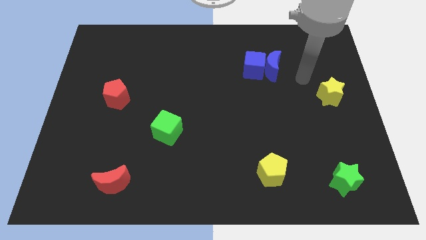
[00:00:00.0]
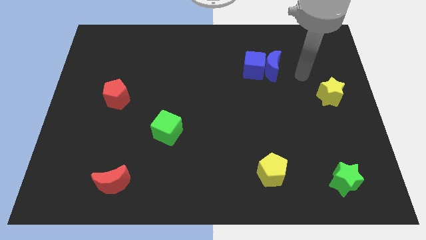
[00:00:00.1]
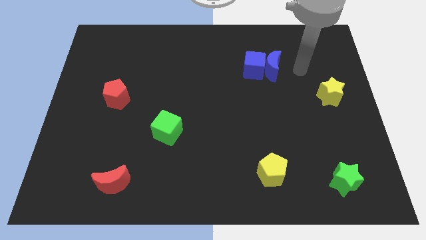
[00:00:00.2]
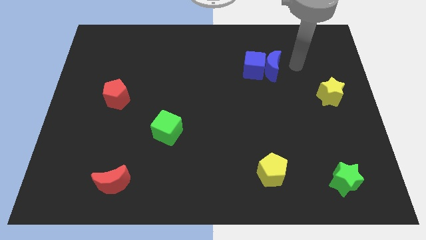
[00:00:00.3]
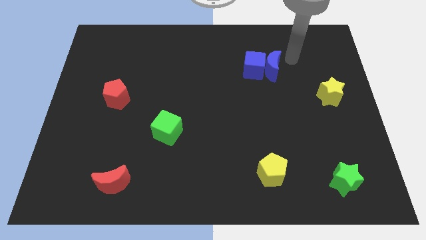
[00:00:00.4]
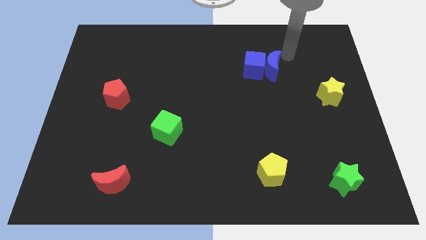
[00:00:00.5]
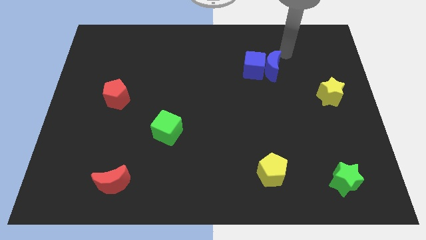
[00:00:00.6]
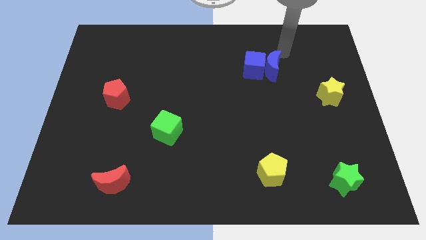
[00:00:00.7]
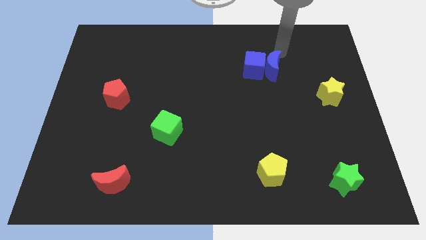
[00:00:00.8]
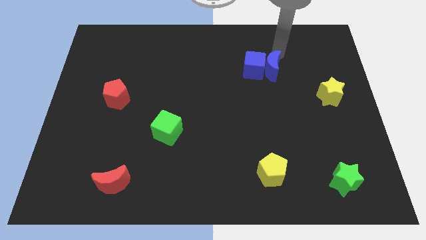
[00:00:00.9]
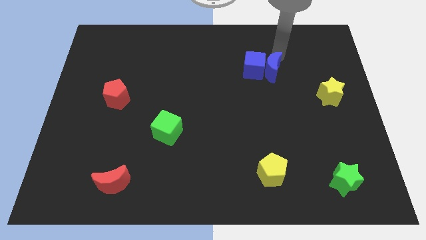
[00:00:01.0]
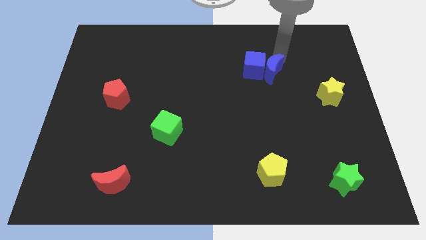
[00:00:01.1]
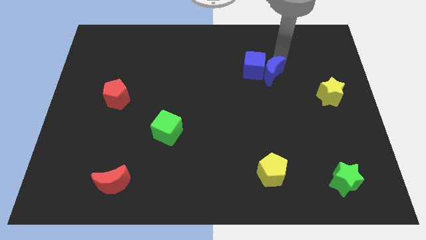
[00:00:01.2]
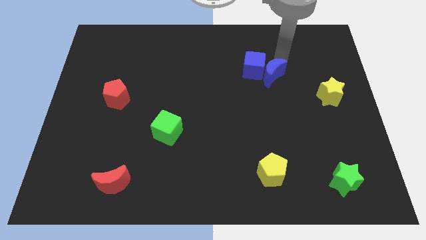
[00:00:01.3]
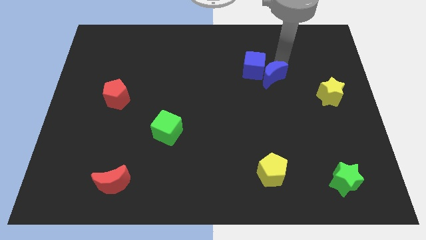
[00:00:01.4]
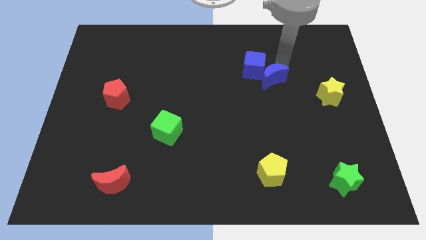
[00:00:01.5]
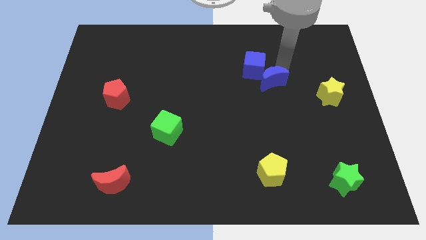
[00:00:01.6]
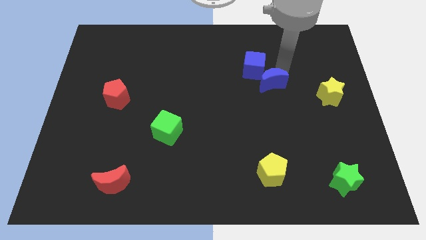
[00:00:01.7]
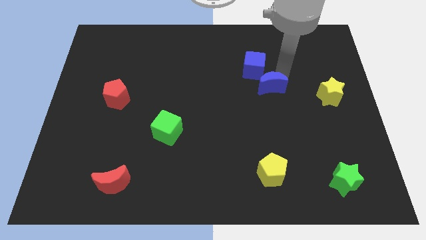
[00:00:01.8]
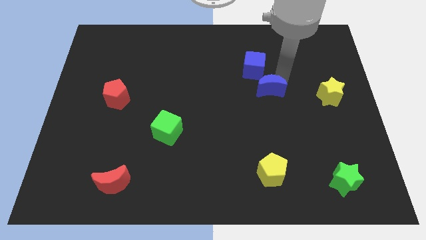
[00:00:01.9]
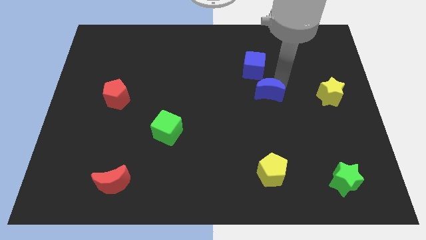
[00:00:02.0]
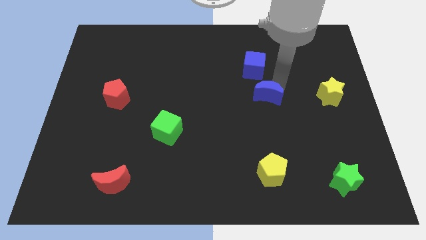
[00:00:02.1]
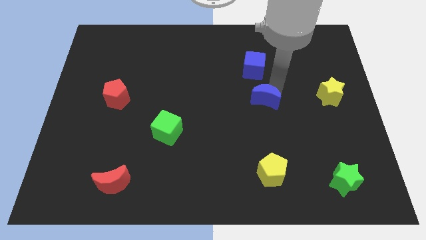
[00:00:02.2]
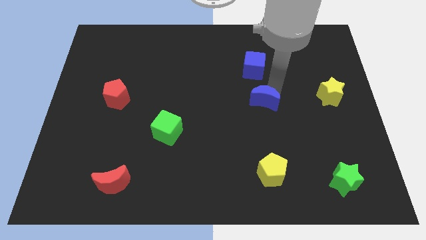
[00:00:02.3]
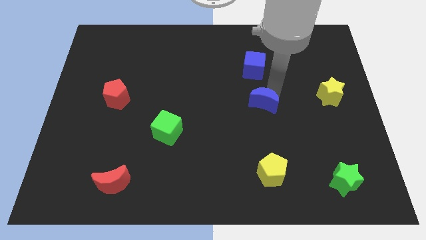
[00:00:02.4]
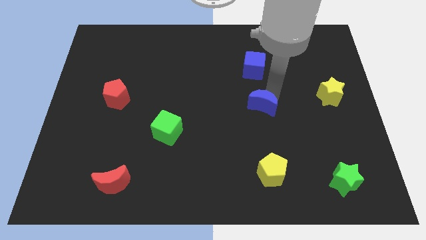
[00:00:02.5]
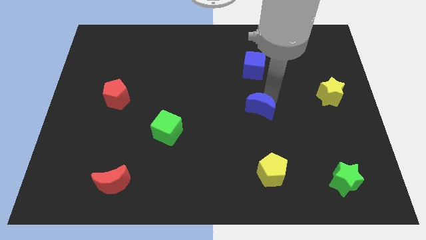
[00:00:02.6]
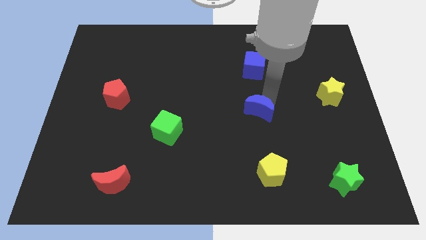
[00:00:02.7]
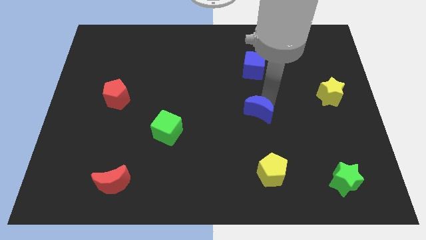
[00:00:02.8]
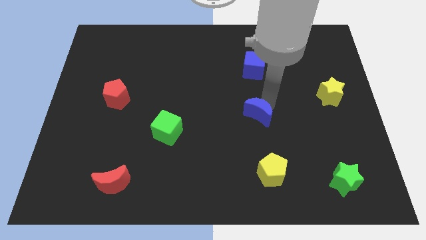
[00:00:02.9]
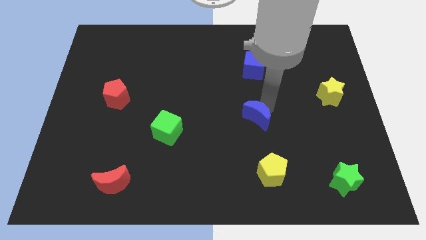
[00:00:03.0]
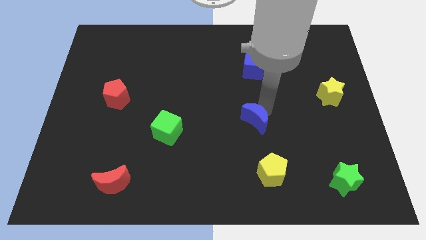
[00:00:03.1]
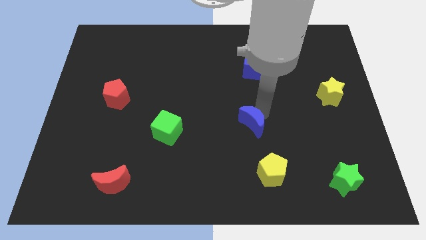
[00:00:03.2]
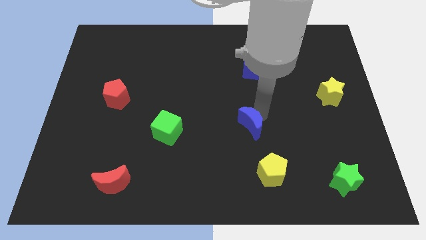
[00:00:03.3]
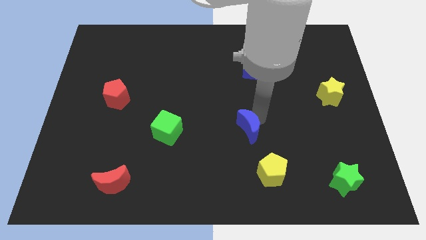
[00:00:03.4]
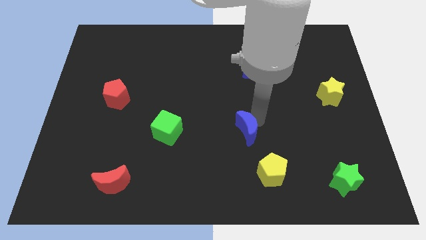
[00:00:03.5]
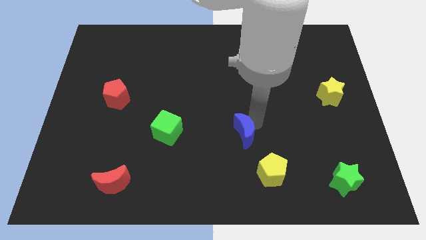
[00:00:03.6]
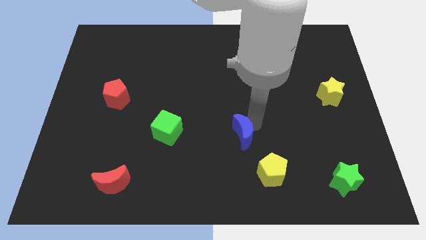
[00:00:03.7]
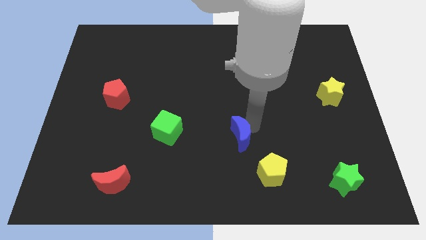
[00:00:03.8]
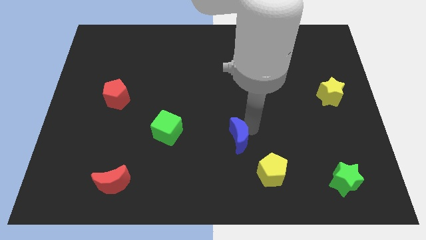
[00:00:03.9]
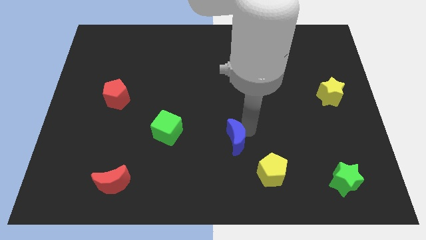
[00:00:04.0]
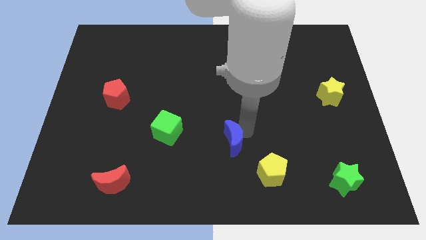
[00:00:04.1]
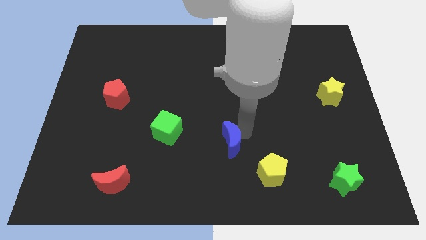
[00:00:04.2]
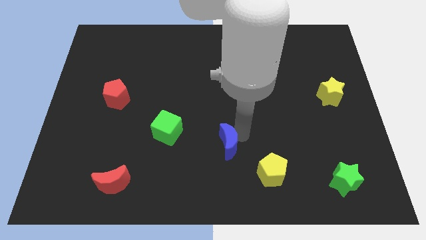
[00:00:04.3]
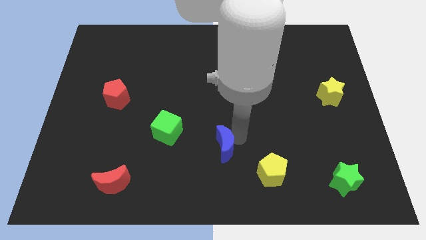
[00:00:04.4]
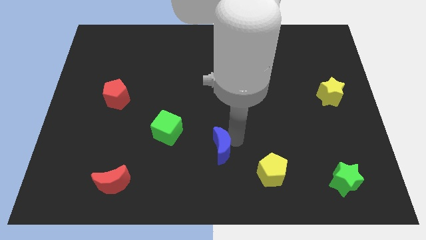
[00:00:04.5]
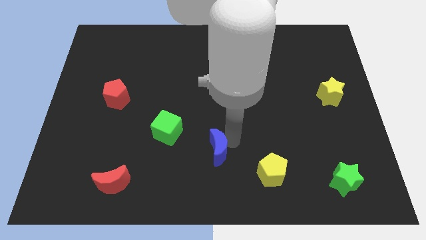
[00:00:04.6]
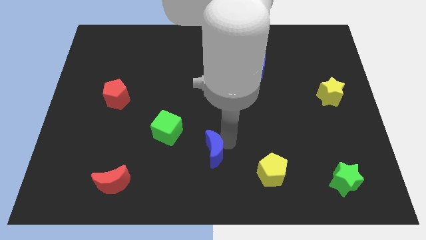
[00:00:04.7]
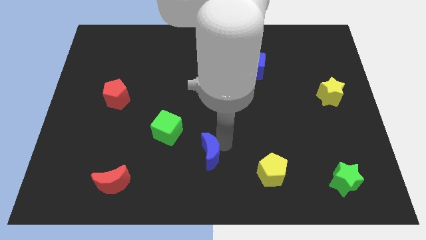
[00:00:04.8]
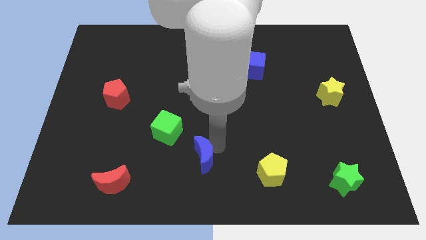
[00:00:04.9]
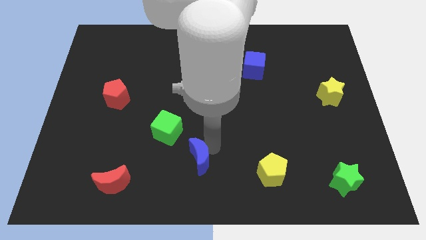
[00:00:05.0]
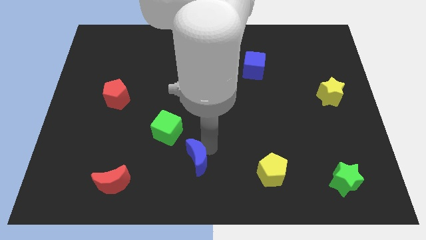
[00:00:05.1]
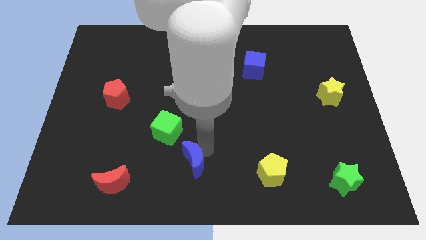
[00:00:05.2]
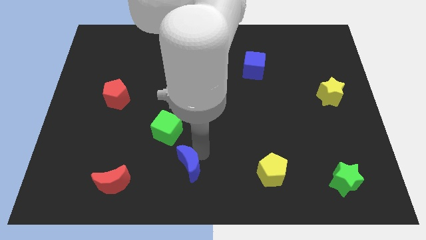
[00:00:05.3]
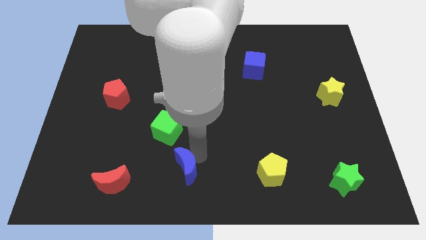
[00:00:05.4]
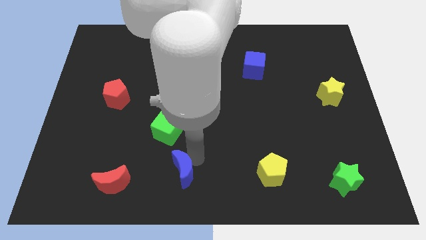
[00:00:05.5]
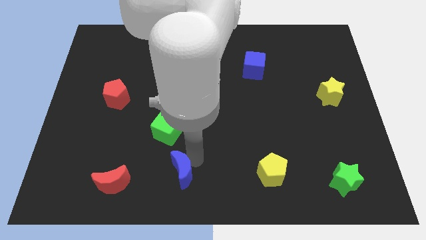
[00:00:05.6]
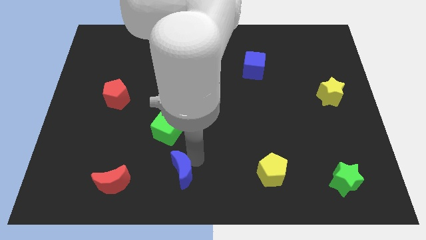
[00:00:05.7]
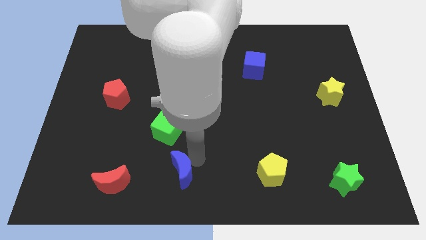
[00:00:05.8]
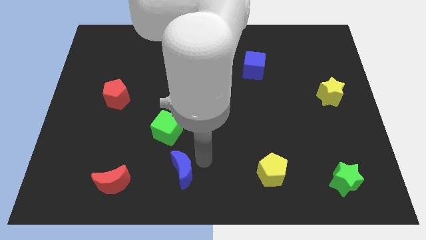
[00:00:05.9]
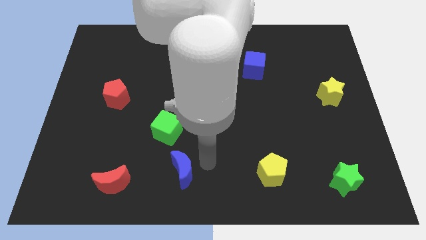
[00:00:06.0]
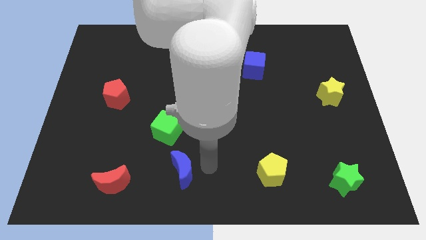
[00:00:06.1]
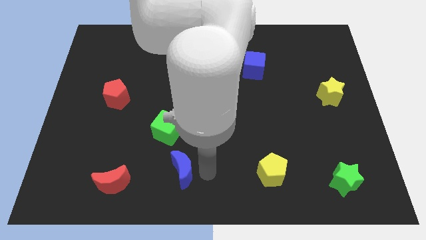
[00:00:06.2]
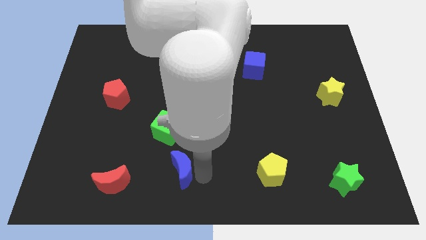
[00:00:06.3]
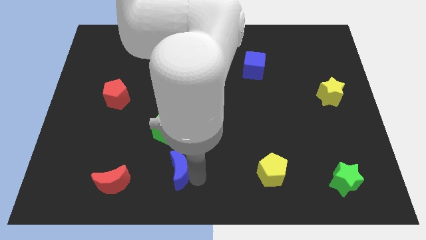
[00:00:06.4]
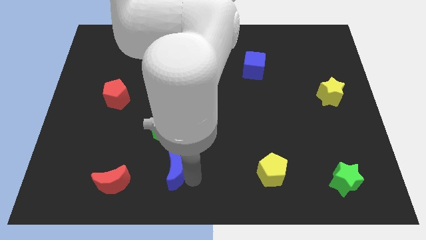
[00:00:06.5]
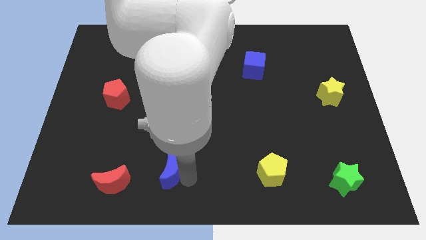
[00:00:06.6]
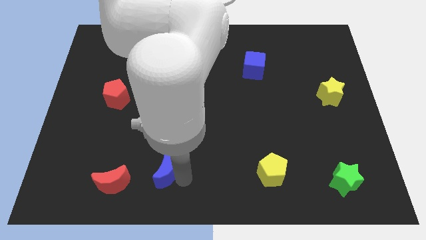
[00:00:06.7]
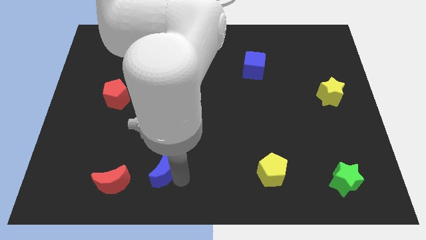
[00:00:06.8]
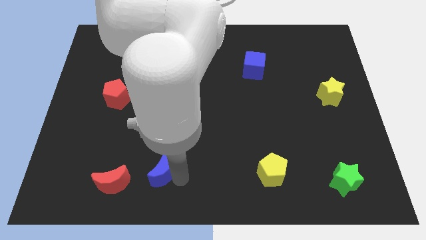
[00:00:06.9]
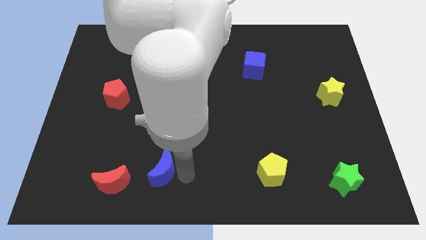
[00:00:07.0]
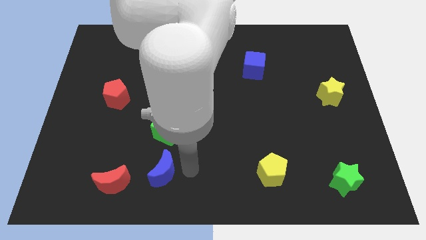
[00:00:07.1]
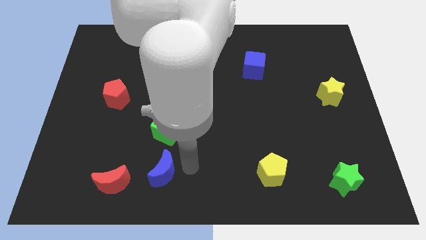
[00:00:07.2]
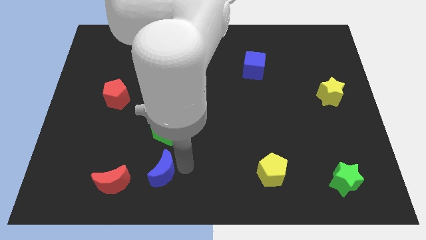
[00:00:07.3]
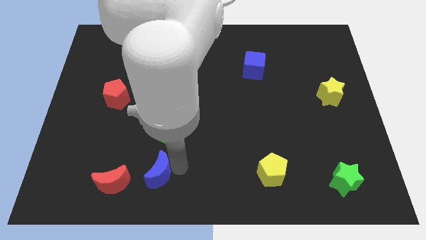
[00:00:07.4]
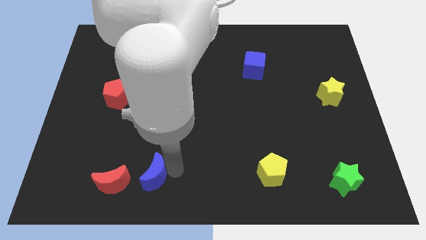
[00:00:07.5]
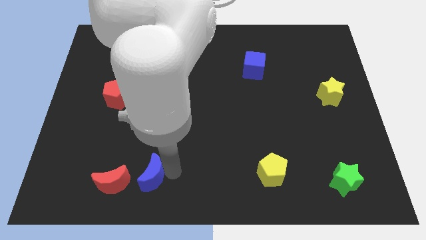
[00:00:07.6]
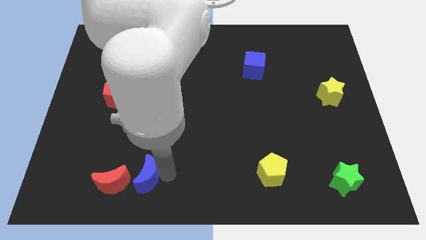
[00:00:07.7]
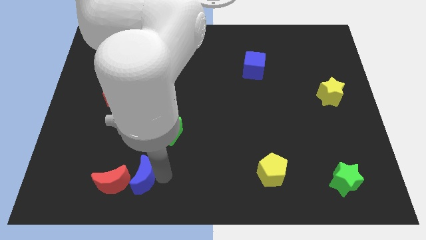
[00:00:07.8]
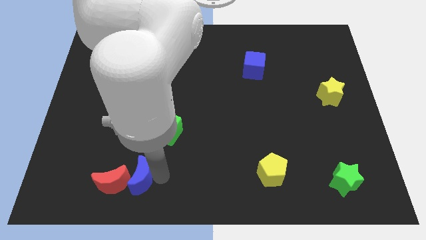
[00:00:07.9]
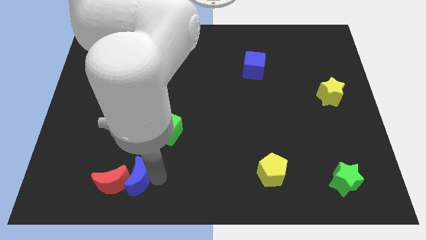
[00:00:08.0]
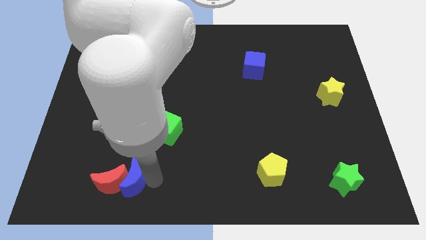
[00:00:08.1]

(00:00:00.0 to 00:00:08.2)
slide the blue moon close to the red moon

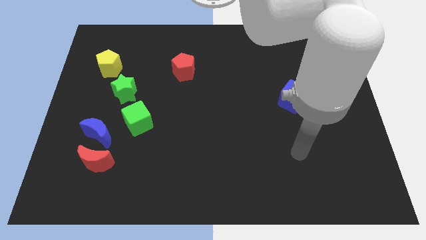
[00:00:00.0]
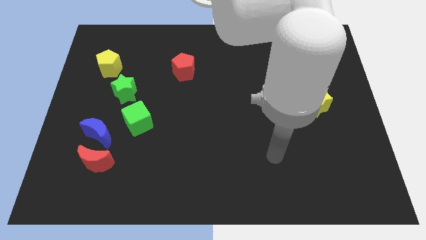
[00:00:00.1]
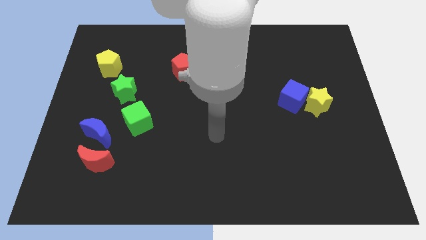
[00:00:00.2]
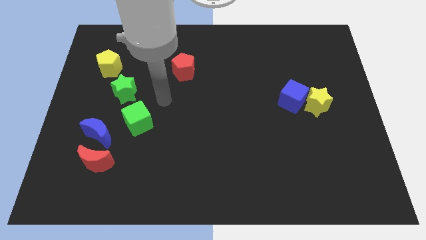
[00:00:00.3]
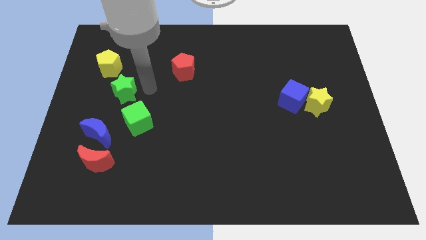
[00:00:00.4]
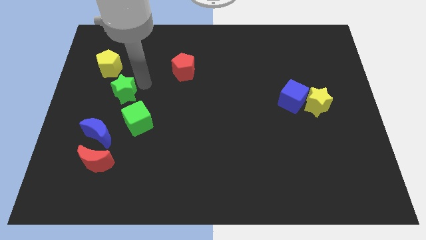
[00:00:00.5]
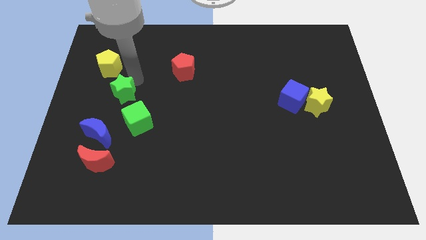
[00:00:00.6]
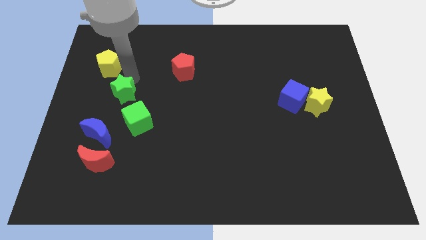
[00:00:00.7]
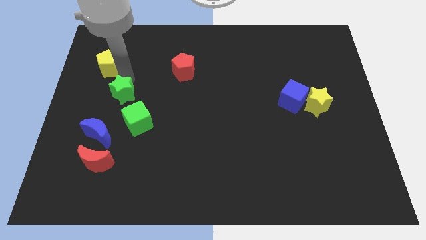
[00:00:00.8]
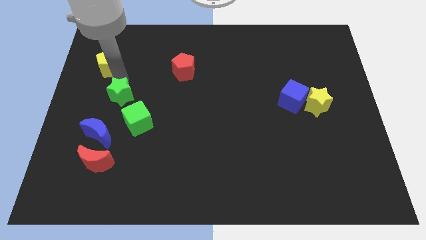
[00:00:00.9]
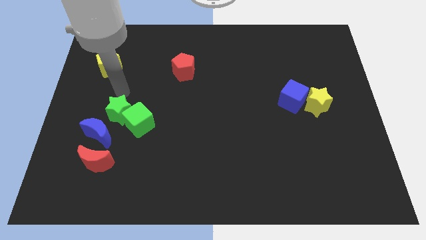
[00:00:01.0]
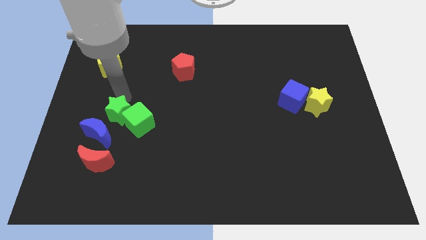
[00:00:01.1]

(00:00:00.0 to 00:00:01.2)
push the green star close to the green cube
